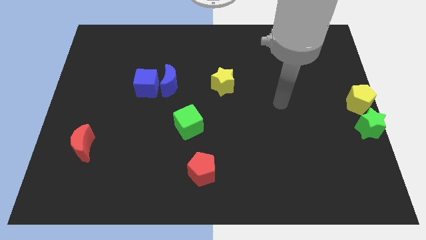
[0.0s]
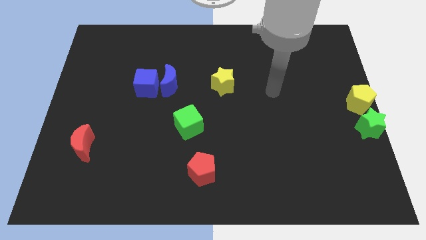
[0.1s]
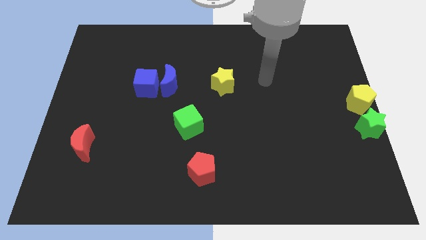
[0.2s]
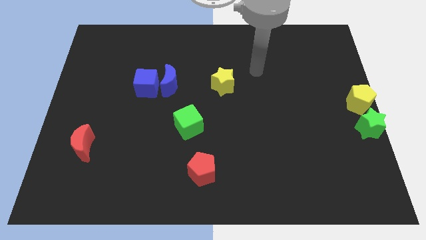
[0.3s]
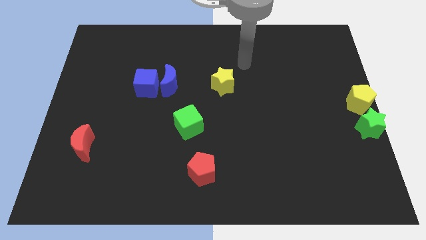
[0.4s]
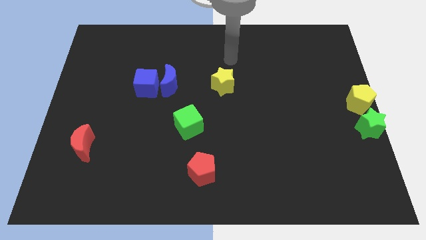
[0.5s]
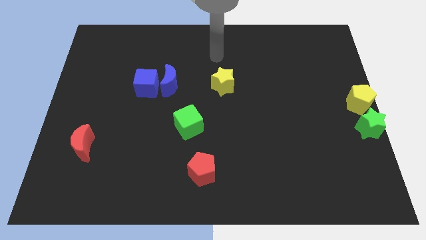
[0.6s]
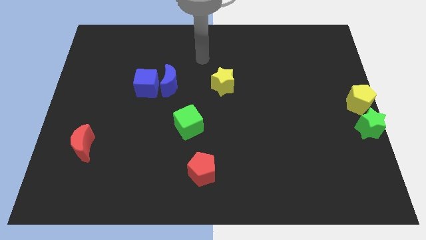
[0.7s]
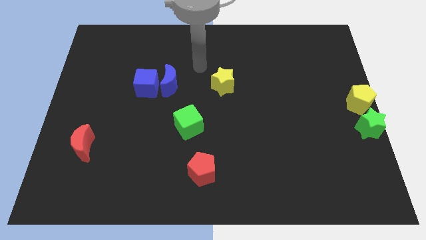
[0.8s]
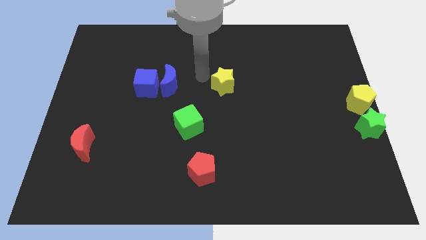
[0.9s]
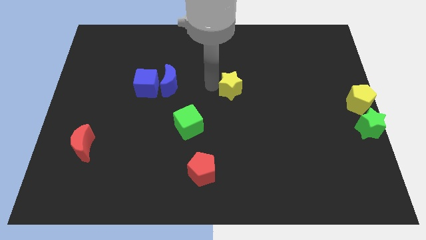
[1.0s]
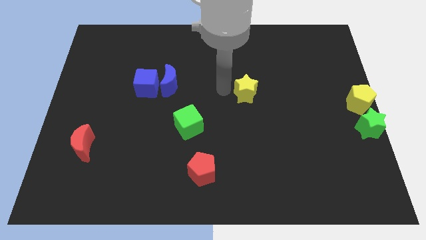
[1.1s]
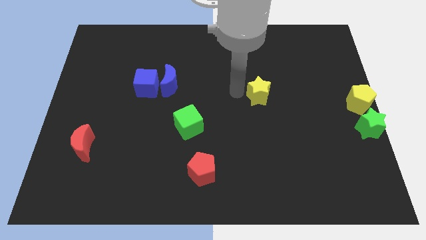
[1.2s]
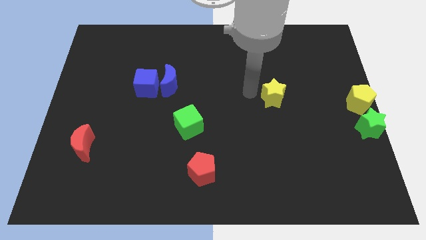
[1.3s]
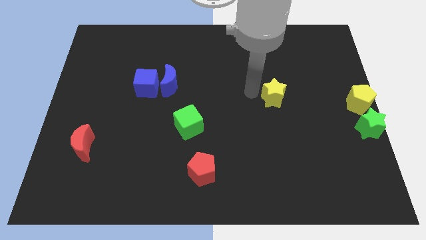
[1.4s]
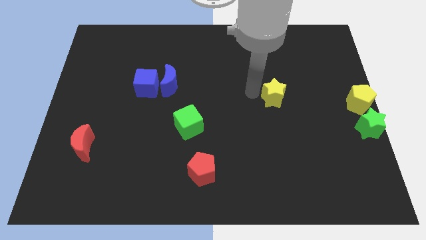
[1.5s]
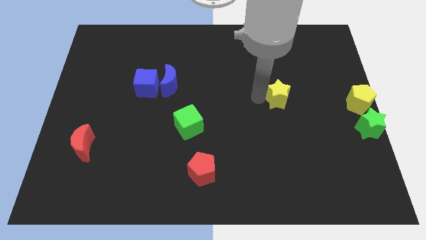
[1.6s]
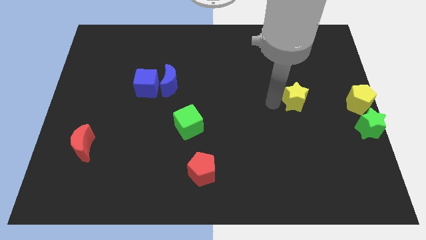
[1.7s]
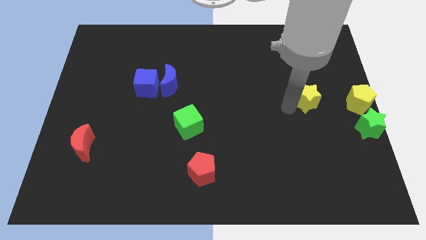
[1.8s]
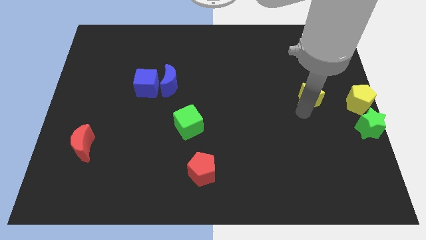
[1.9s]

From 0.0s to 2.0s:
place yellow star near to yellow pentagon

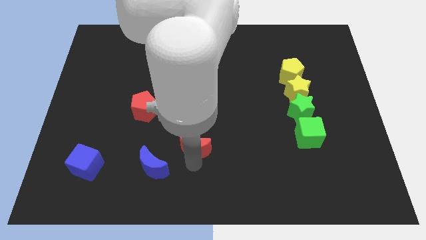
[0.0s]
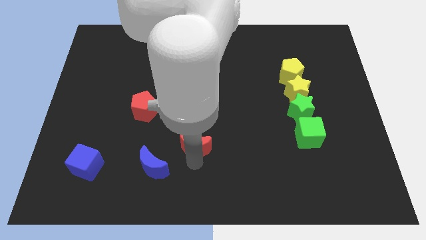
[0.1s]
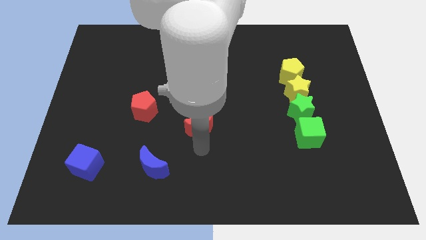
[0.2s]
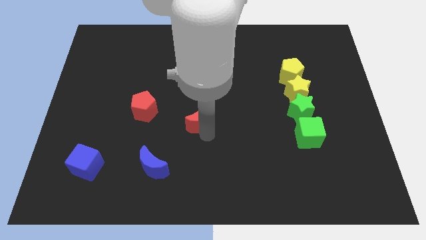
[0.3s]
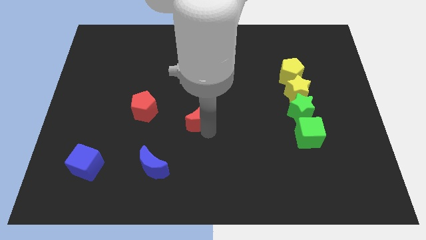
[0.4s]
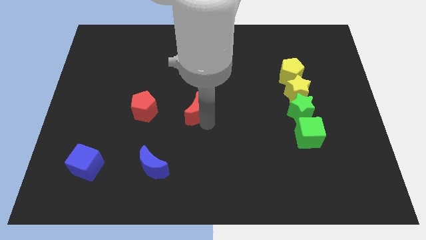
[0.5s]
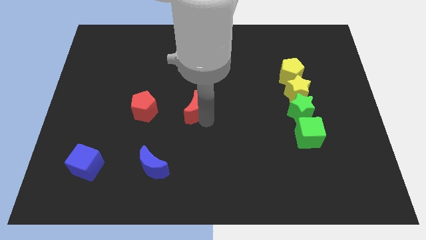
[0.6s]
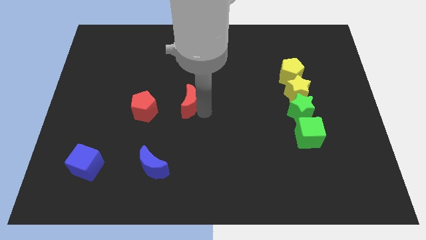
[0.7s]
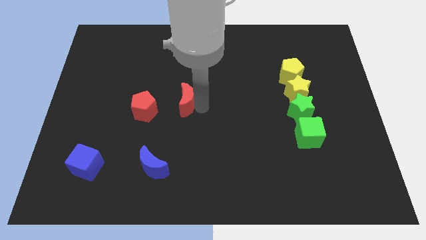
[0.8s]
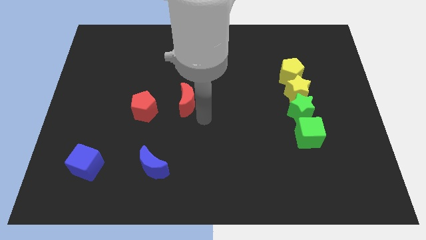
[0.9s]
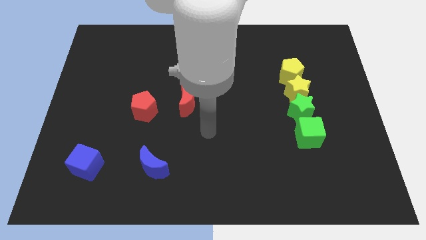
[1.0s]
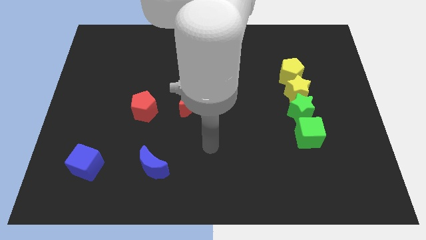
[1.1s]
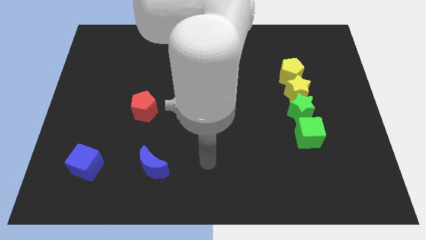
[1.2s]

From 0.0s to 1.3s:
move the red crescent to the right of the red pentagon

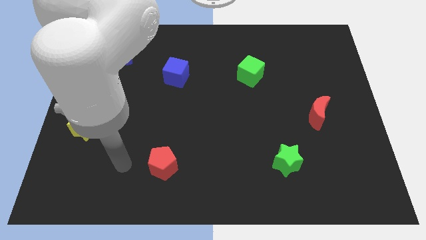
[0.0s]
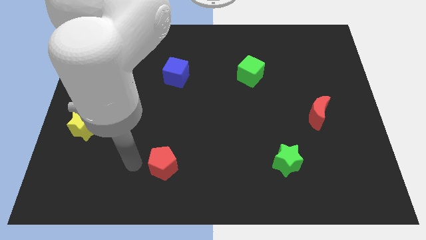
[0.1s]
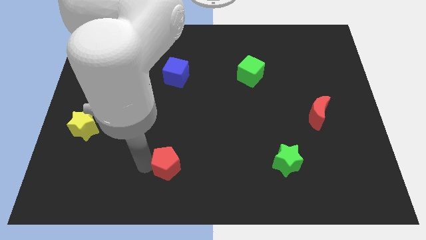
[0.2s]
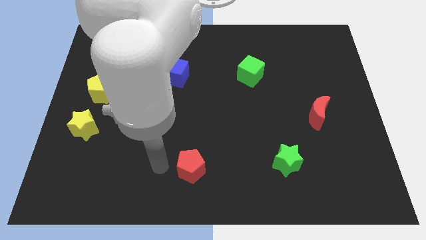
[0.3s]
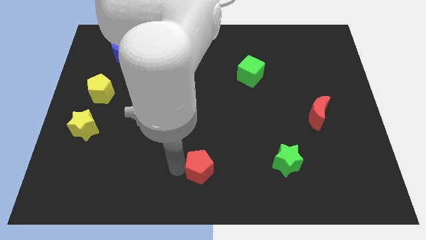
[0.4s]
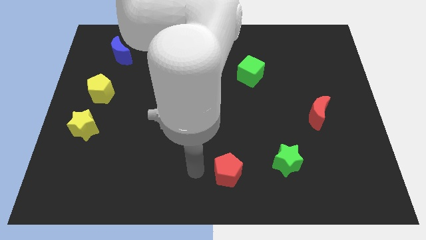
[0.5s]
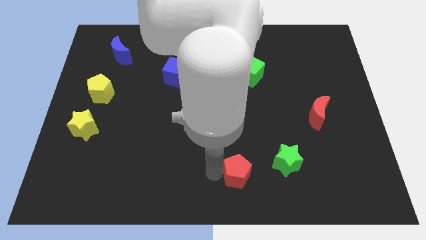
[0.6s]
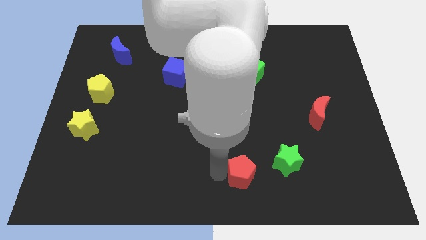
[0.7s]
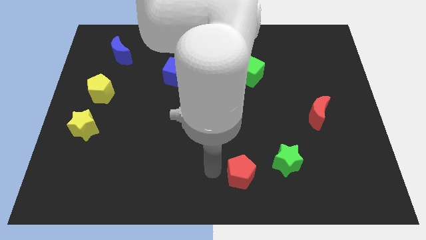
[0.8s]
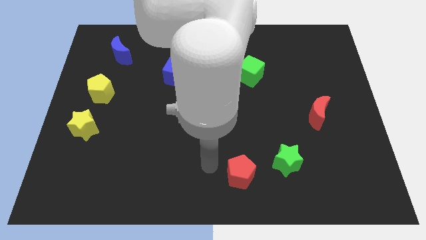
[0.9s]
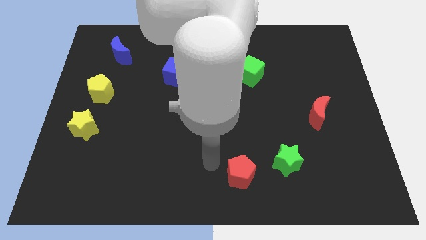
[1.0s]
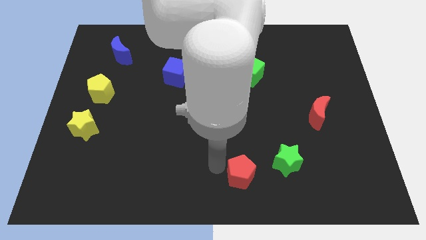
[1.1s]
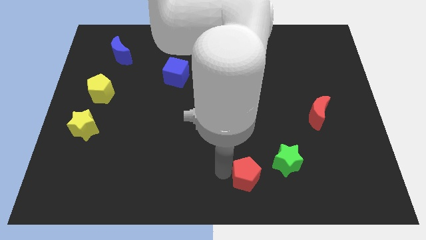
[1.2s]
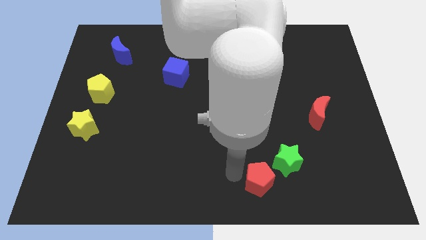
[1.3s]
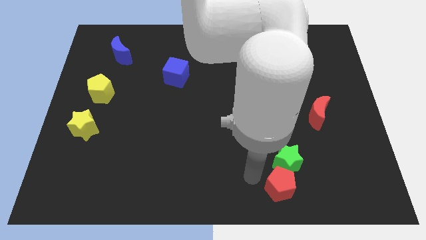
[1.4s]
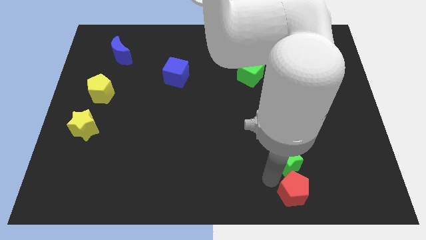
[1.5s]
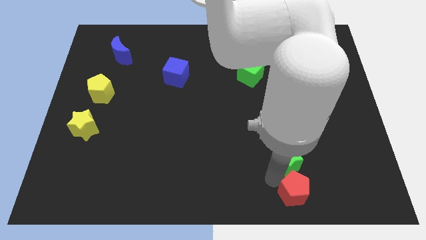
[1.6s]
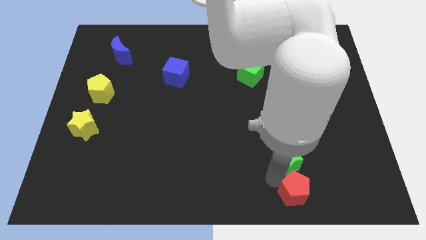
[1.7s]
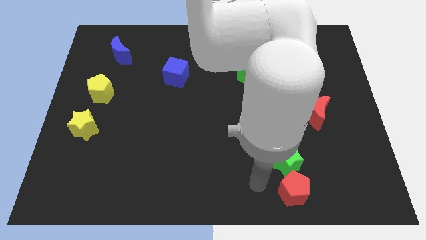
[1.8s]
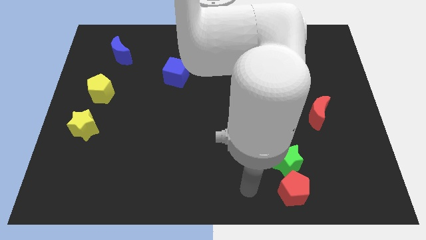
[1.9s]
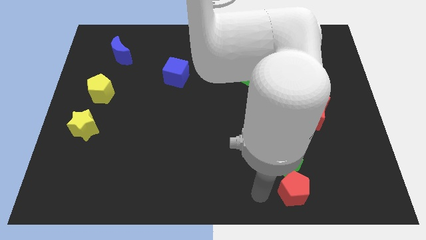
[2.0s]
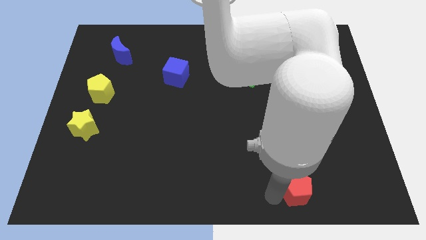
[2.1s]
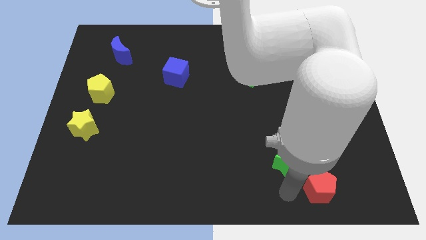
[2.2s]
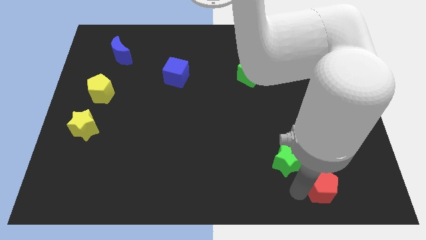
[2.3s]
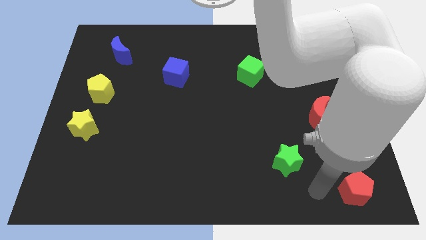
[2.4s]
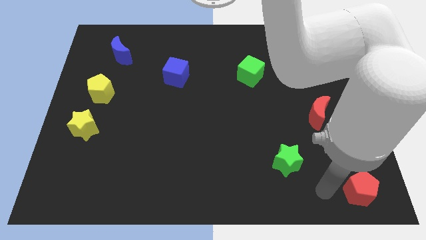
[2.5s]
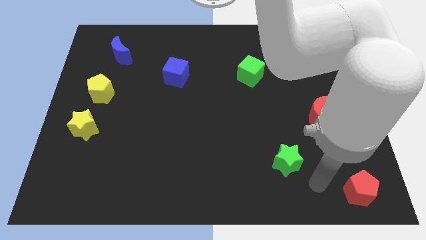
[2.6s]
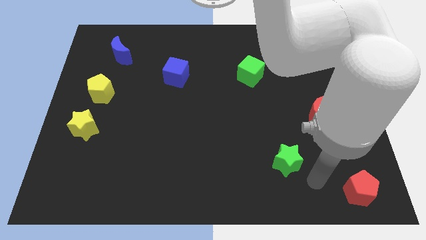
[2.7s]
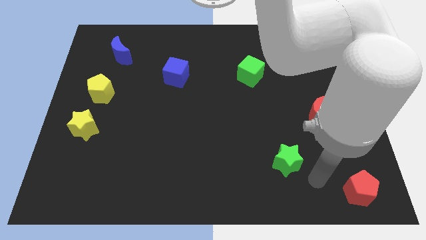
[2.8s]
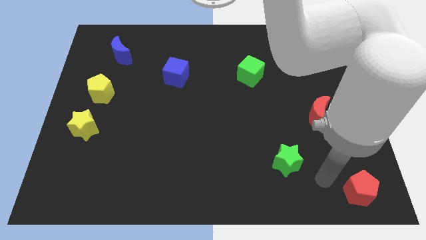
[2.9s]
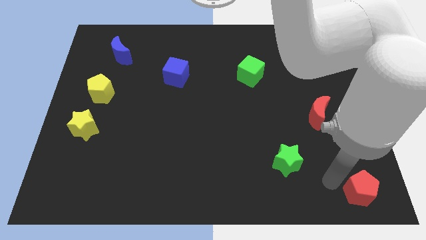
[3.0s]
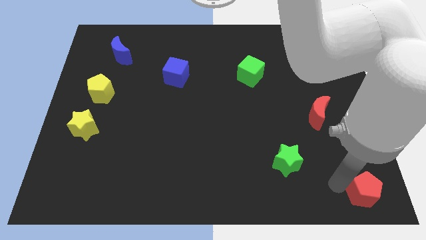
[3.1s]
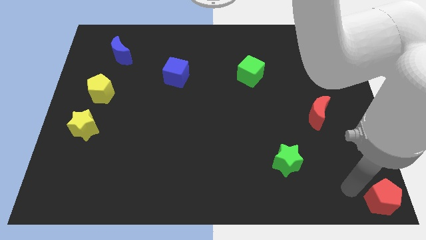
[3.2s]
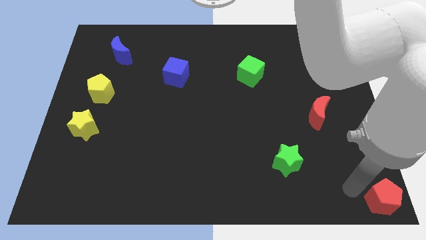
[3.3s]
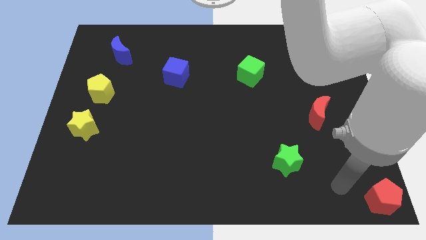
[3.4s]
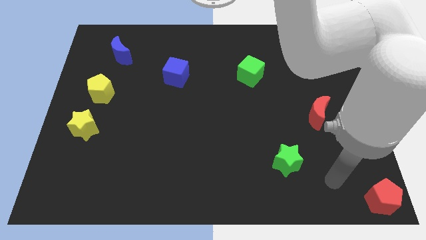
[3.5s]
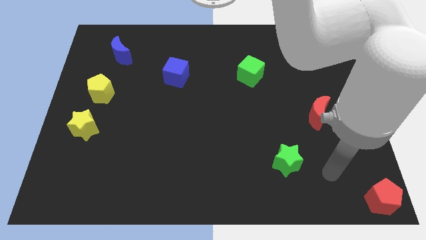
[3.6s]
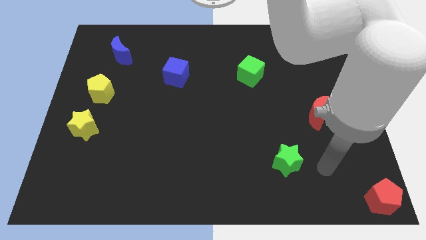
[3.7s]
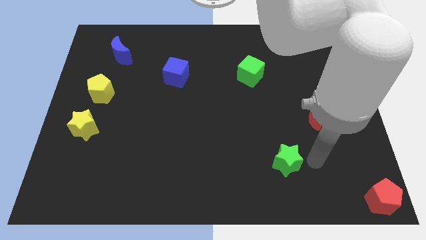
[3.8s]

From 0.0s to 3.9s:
place the red pentagon at the bottom right corner of the board

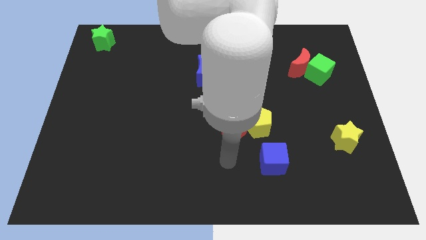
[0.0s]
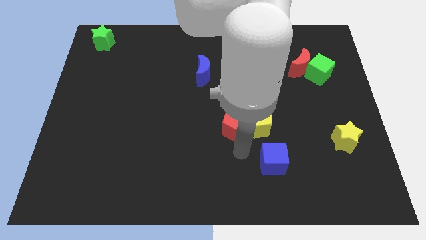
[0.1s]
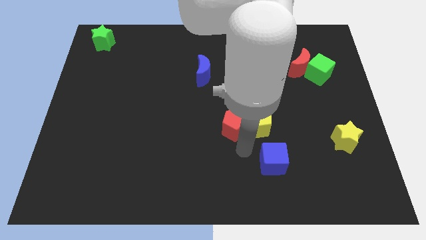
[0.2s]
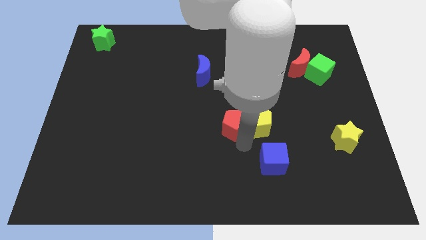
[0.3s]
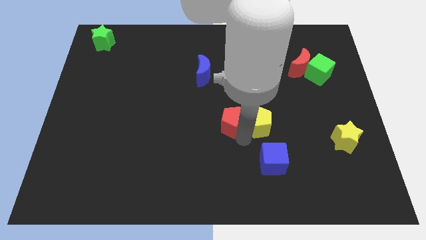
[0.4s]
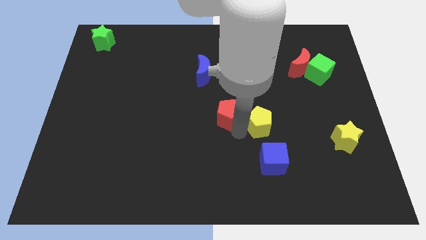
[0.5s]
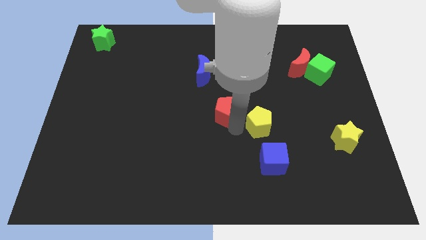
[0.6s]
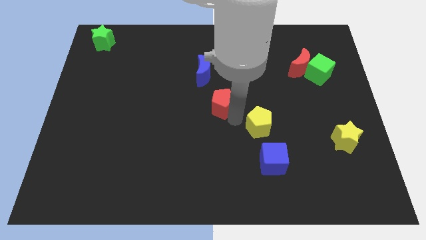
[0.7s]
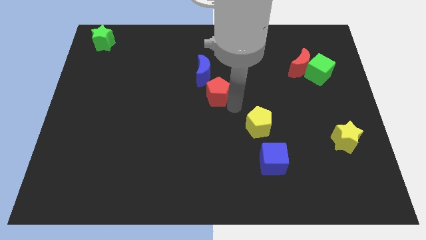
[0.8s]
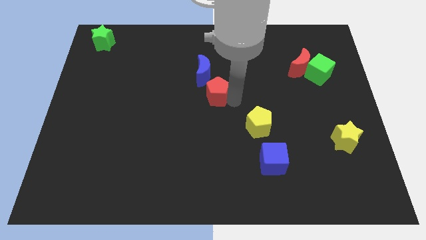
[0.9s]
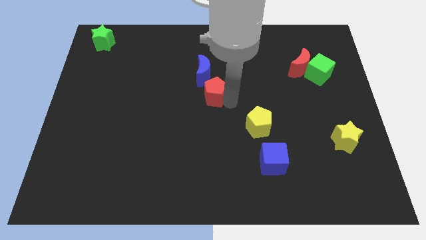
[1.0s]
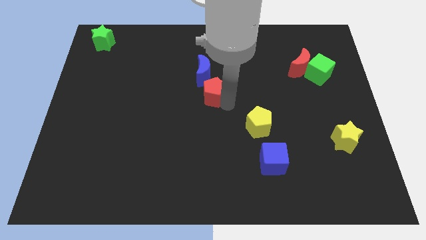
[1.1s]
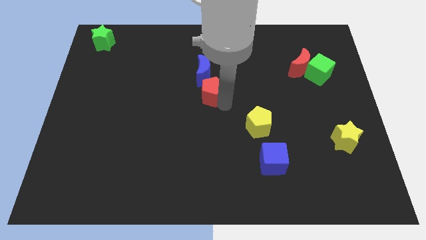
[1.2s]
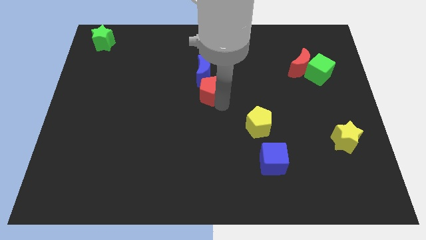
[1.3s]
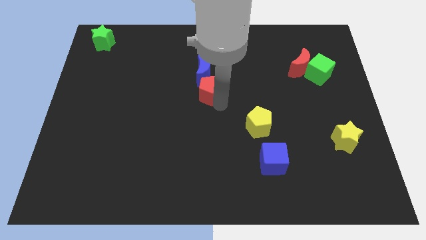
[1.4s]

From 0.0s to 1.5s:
push the red pentagon closer to the blue crescent

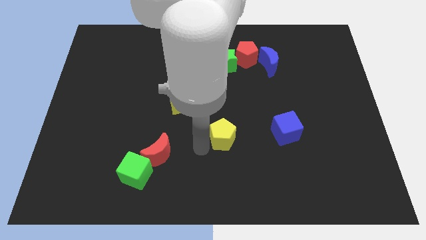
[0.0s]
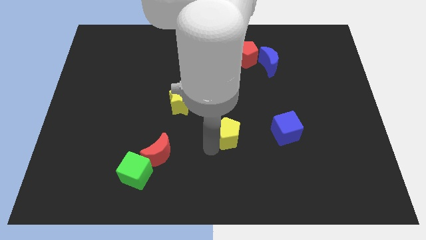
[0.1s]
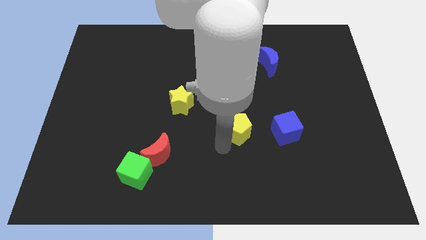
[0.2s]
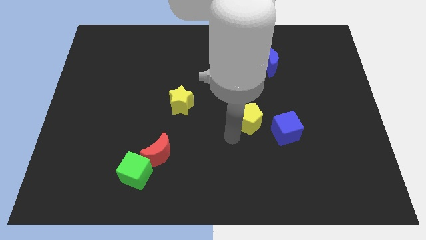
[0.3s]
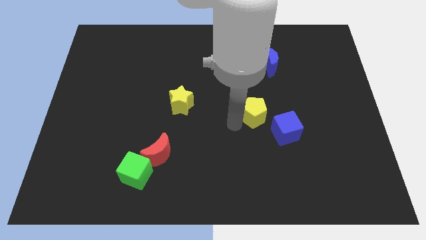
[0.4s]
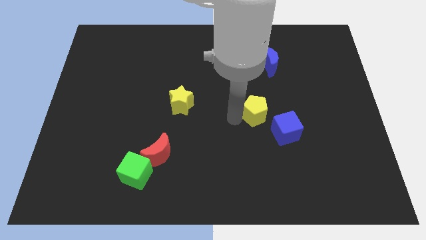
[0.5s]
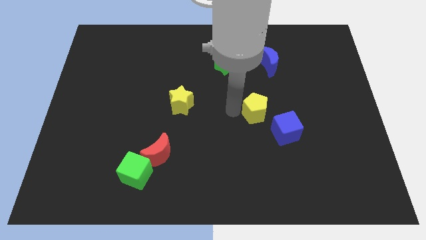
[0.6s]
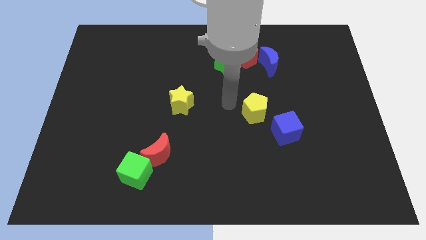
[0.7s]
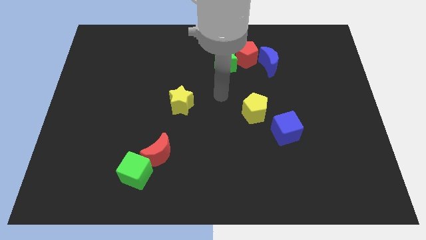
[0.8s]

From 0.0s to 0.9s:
move the yellow pentagon near the blue cube
